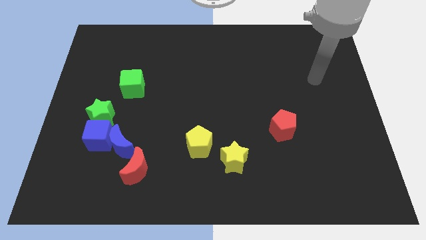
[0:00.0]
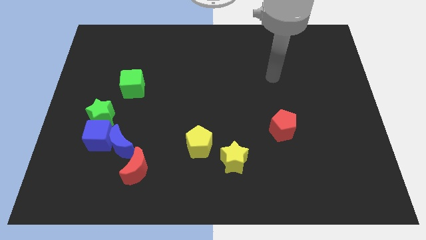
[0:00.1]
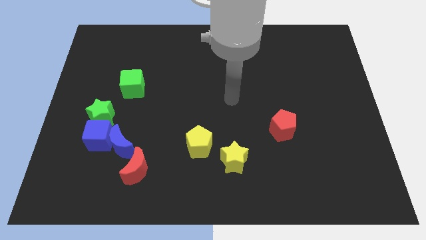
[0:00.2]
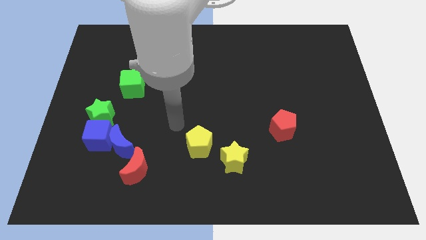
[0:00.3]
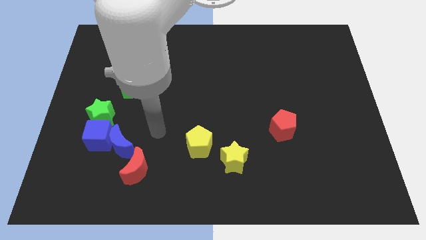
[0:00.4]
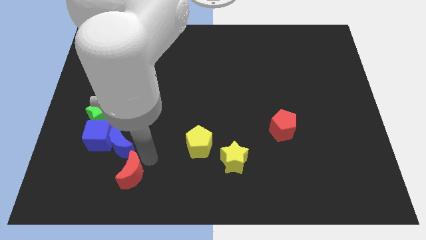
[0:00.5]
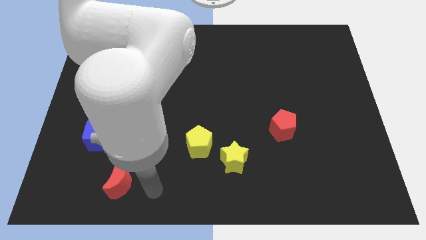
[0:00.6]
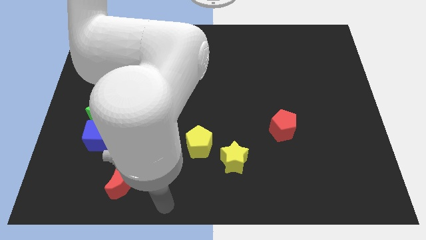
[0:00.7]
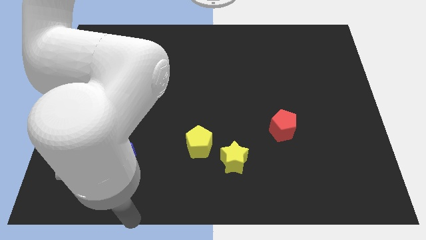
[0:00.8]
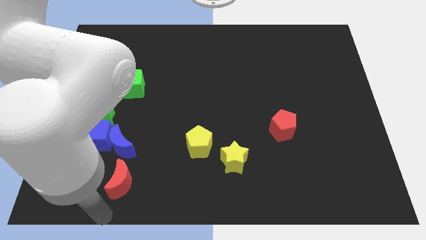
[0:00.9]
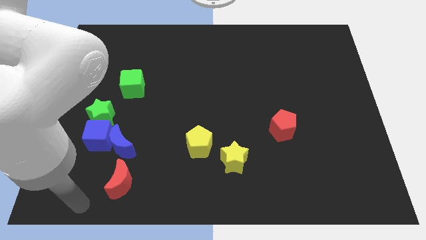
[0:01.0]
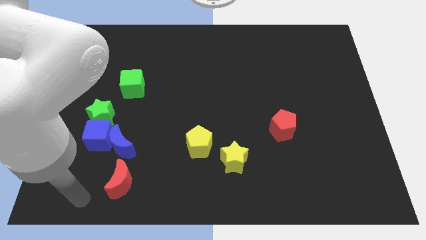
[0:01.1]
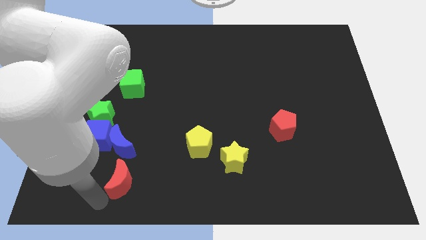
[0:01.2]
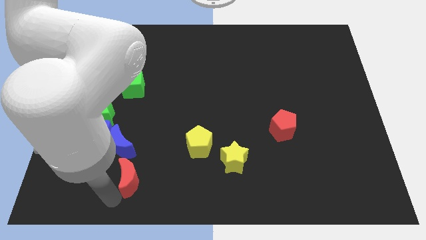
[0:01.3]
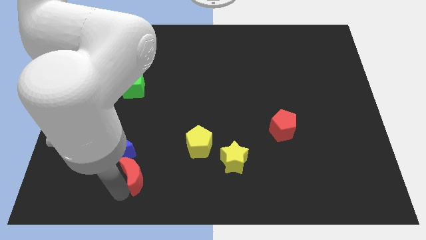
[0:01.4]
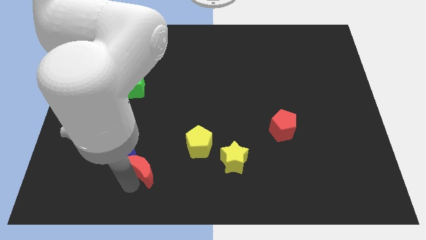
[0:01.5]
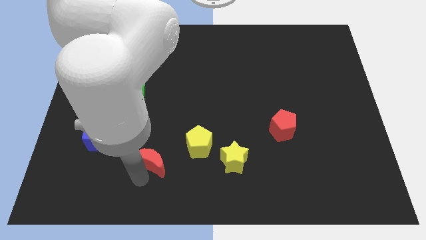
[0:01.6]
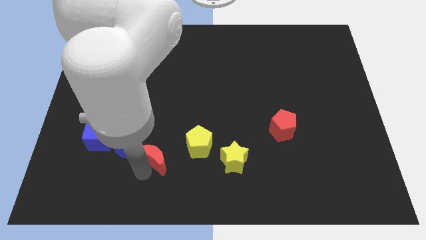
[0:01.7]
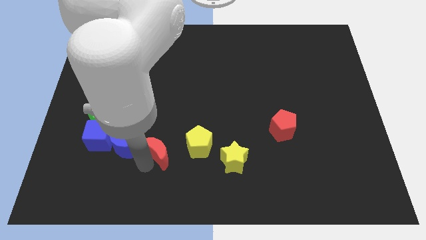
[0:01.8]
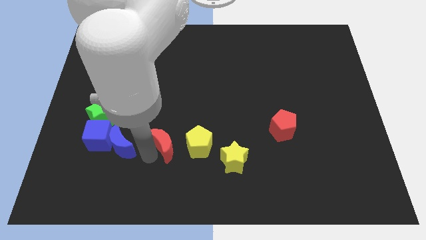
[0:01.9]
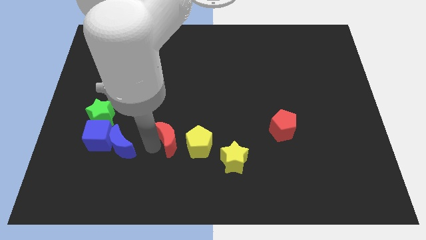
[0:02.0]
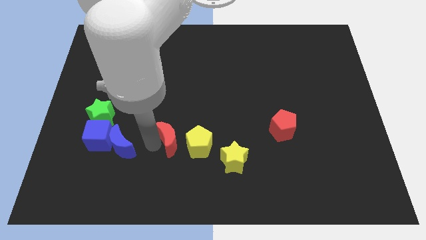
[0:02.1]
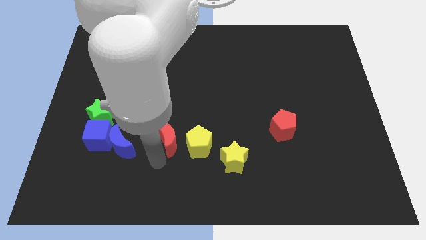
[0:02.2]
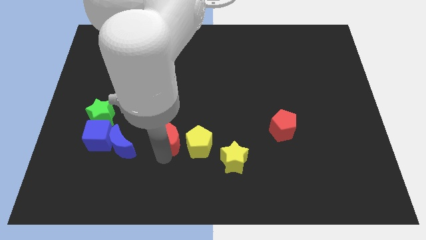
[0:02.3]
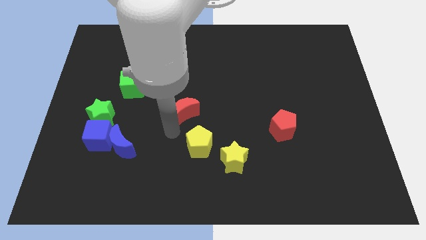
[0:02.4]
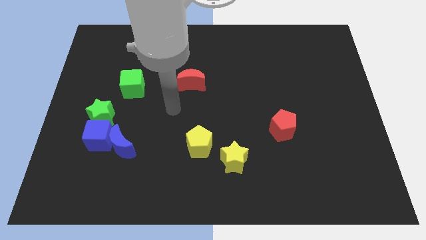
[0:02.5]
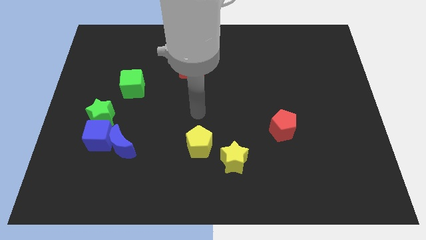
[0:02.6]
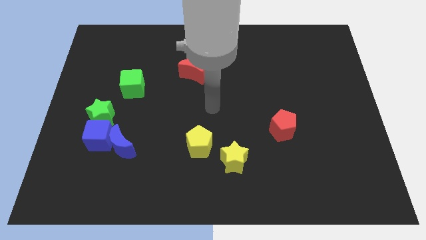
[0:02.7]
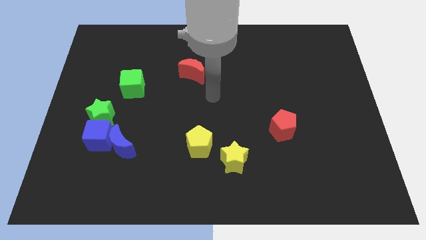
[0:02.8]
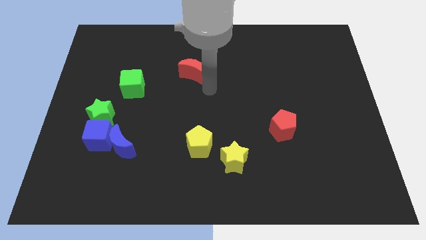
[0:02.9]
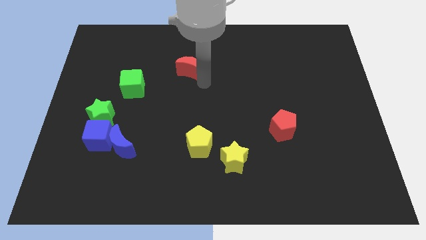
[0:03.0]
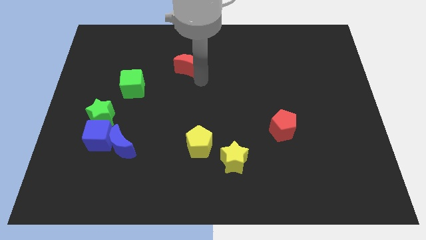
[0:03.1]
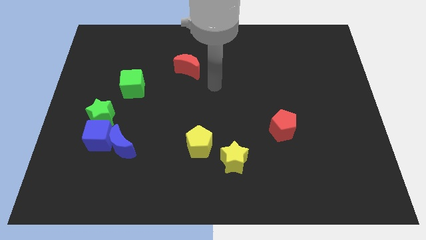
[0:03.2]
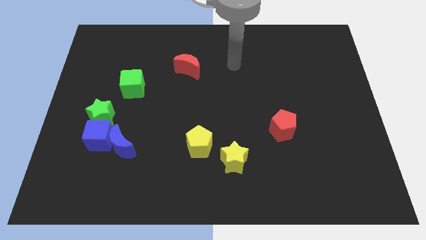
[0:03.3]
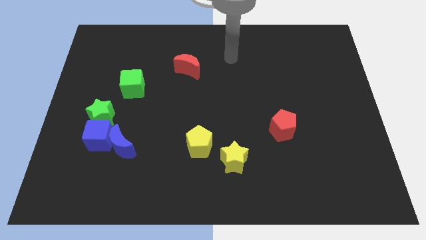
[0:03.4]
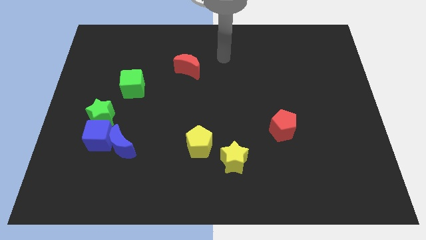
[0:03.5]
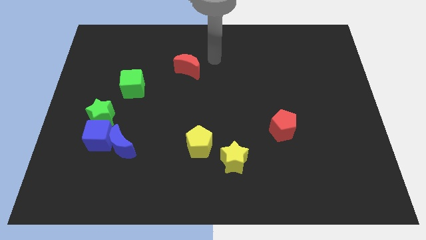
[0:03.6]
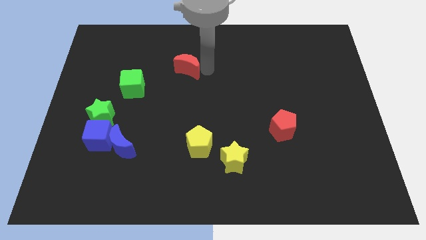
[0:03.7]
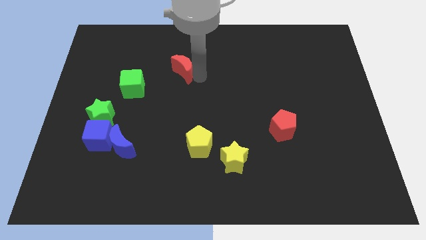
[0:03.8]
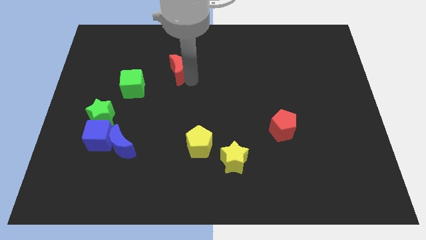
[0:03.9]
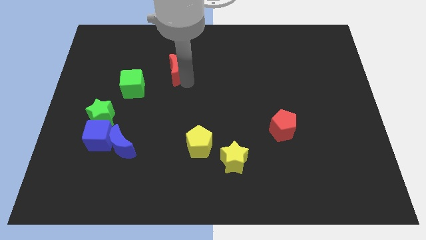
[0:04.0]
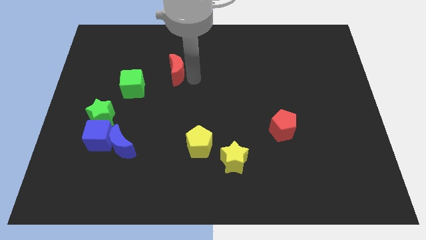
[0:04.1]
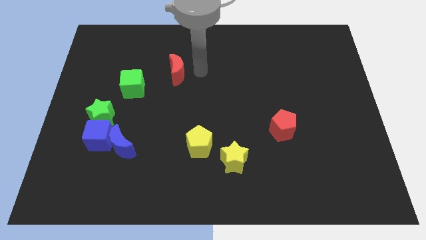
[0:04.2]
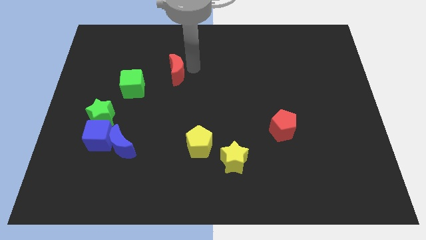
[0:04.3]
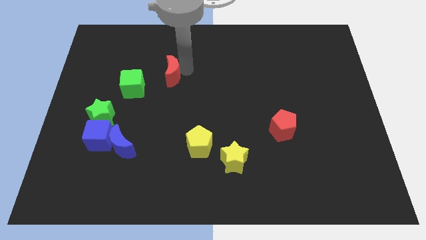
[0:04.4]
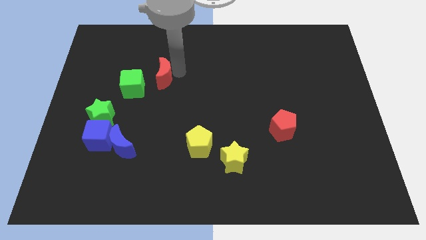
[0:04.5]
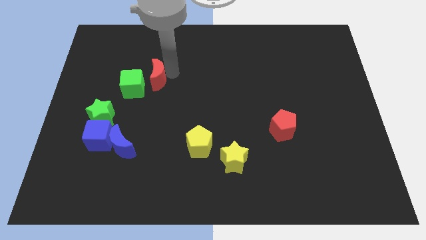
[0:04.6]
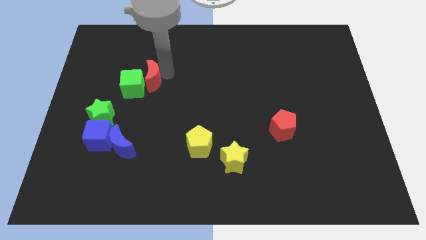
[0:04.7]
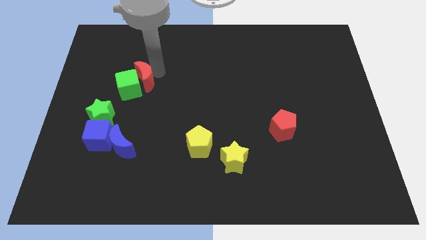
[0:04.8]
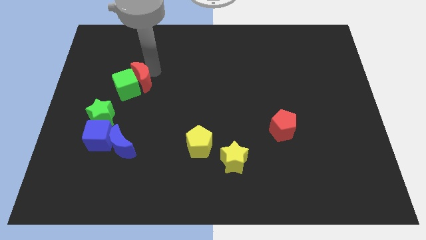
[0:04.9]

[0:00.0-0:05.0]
push the red moon to the green cube

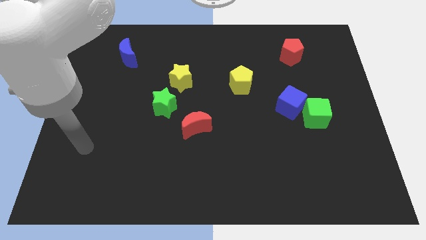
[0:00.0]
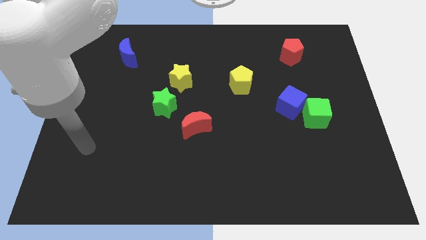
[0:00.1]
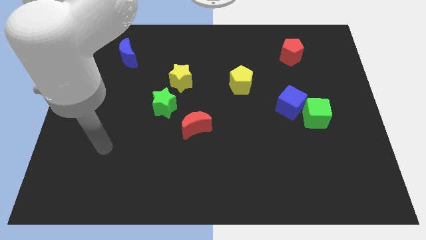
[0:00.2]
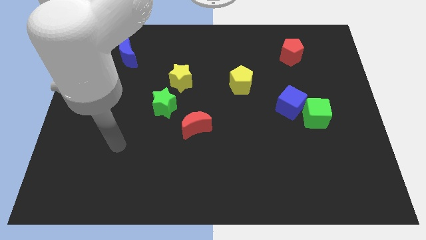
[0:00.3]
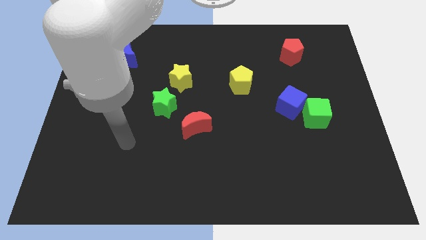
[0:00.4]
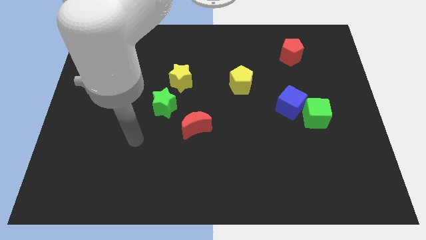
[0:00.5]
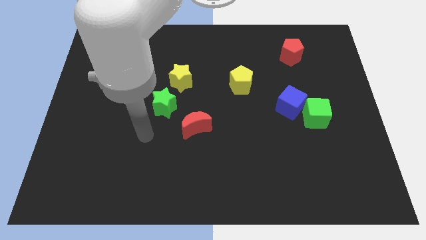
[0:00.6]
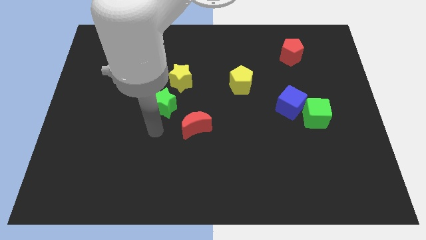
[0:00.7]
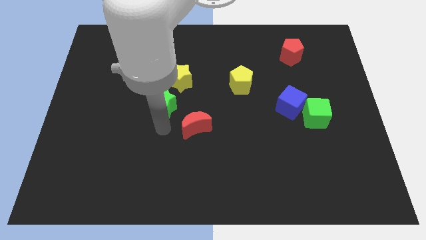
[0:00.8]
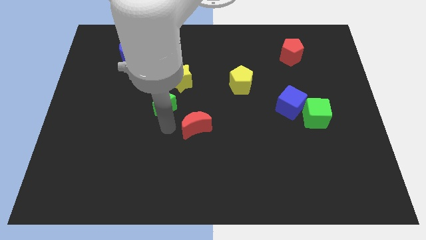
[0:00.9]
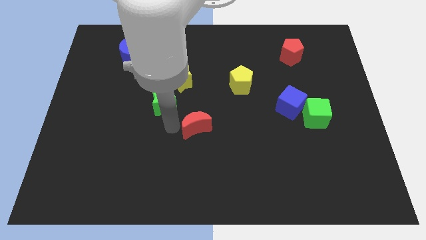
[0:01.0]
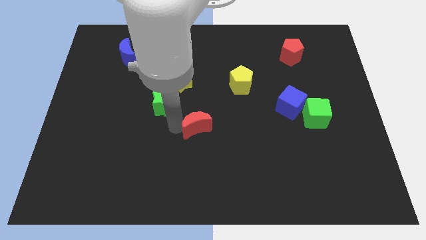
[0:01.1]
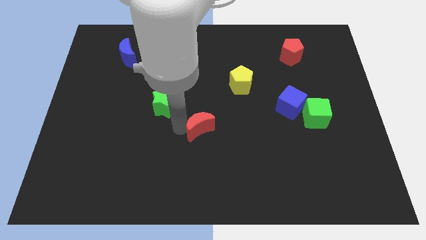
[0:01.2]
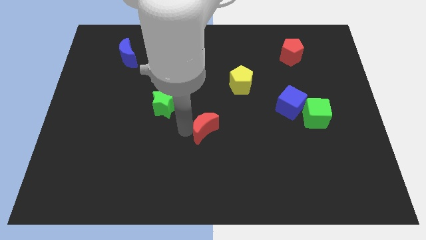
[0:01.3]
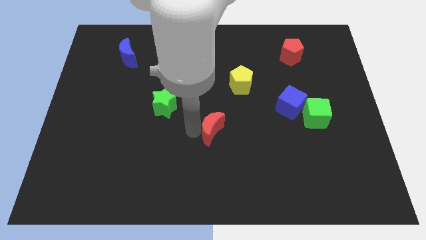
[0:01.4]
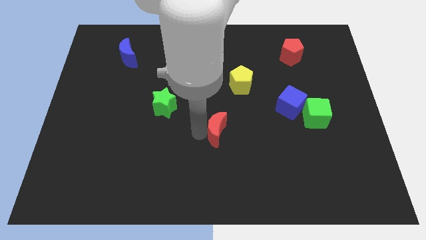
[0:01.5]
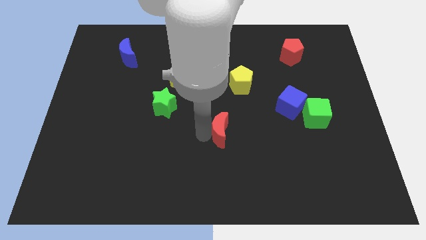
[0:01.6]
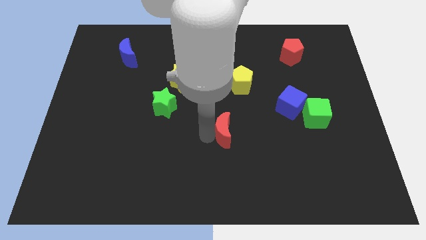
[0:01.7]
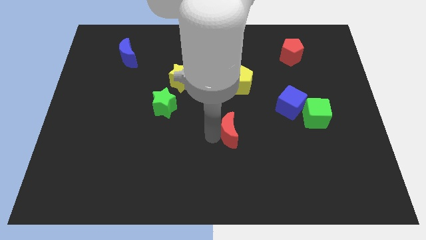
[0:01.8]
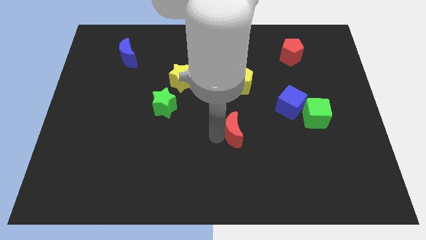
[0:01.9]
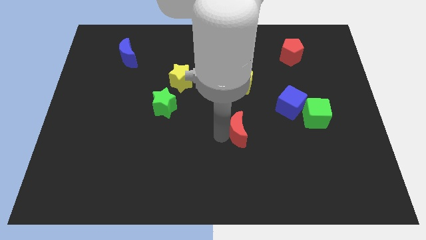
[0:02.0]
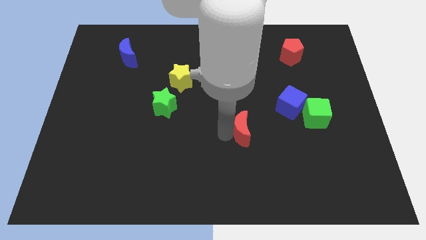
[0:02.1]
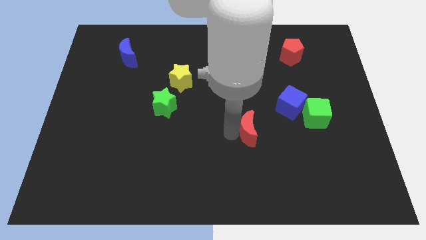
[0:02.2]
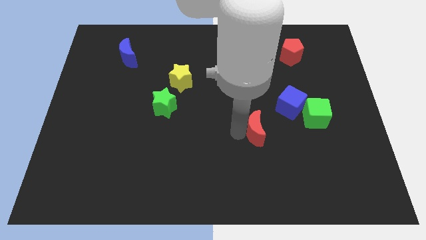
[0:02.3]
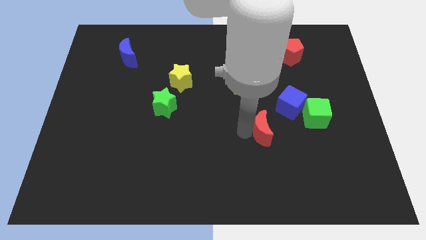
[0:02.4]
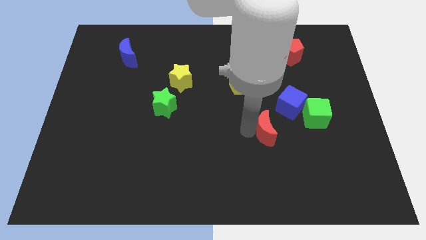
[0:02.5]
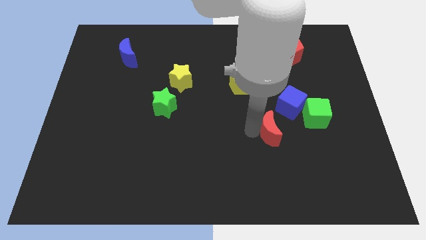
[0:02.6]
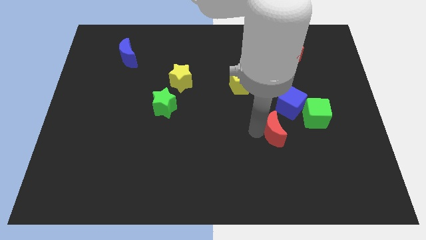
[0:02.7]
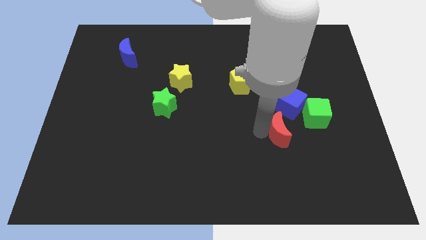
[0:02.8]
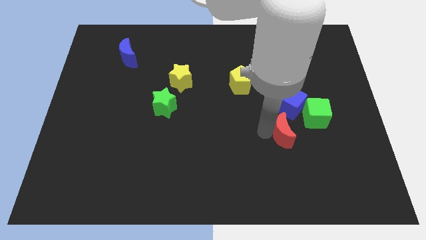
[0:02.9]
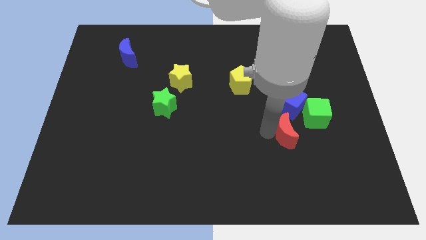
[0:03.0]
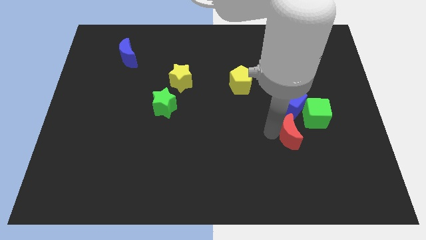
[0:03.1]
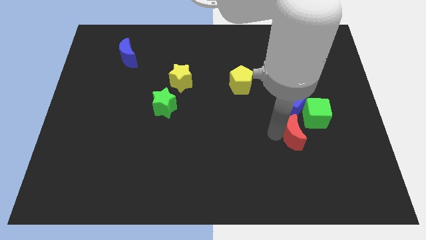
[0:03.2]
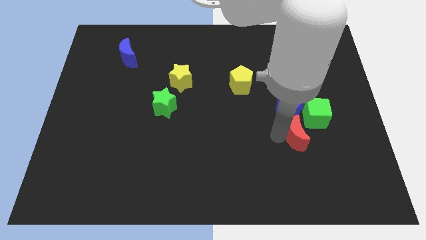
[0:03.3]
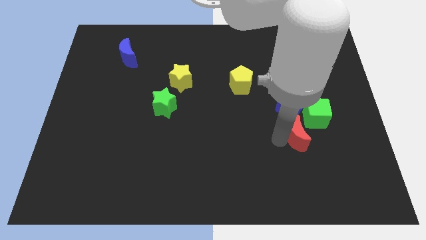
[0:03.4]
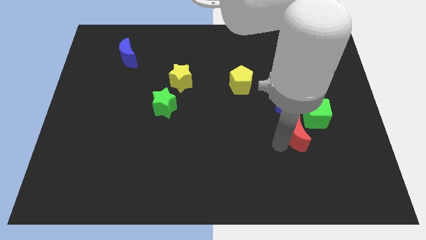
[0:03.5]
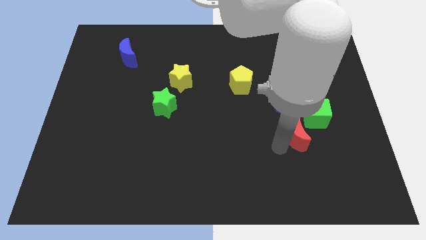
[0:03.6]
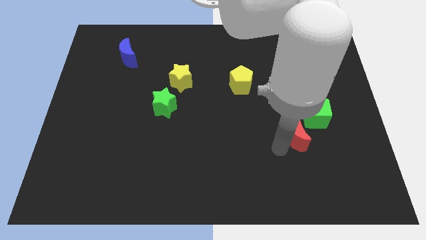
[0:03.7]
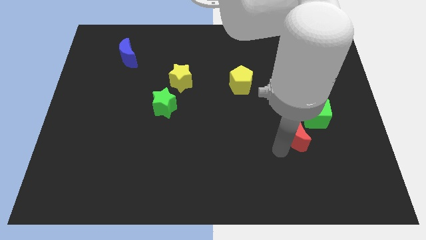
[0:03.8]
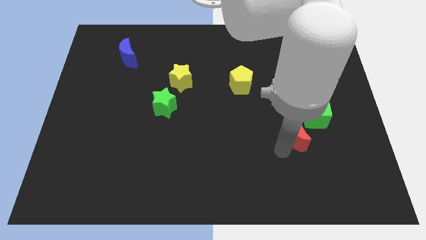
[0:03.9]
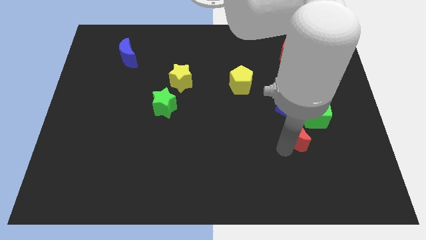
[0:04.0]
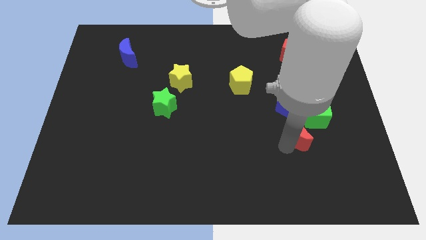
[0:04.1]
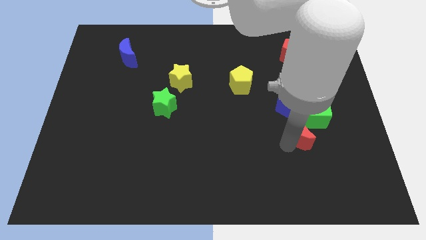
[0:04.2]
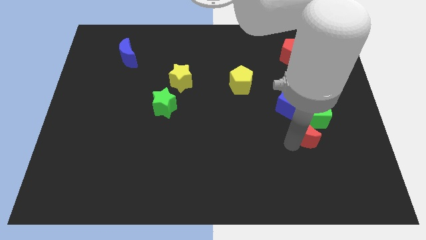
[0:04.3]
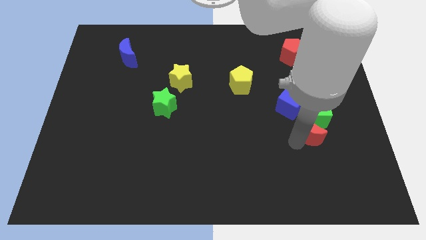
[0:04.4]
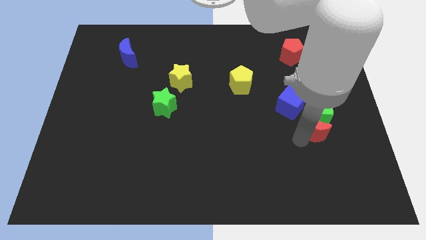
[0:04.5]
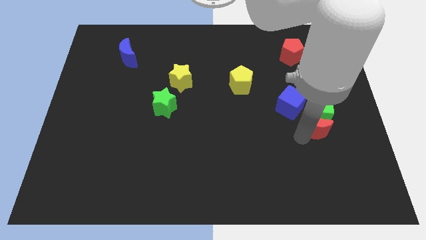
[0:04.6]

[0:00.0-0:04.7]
push the red moon towards the green cube
